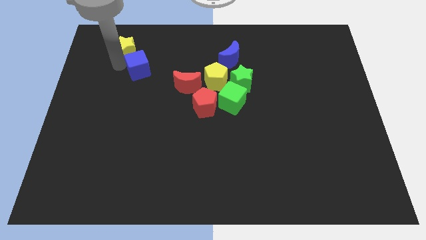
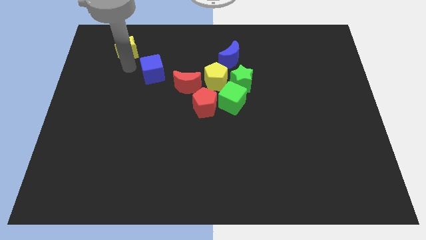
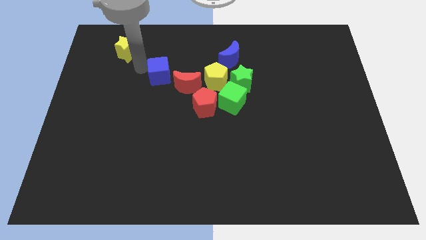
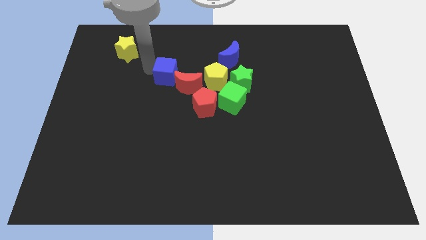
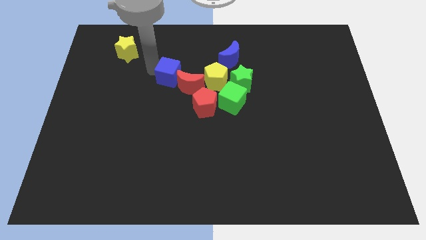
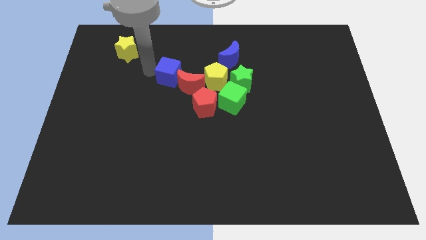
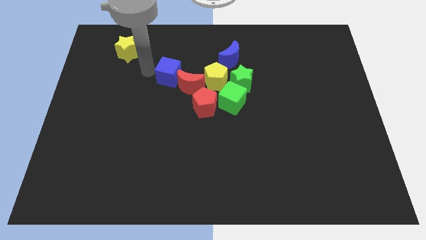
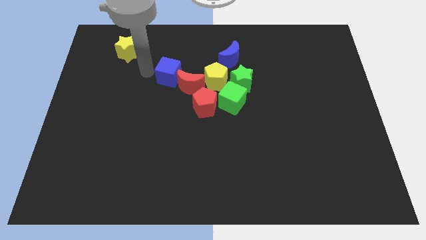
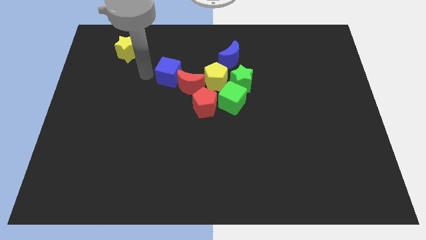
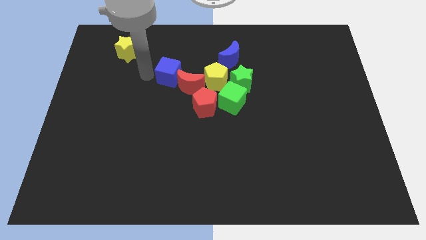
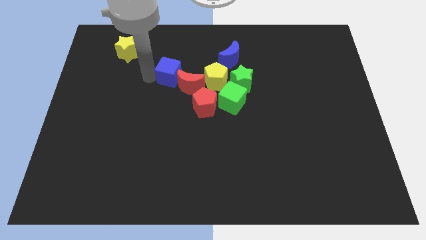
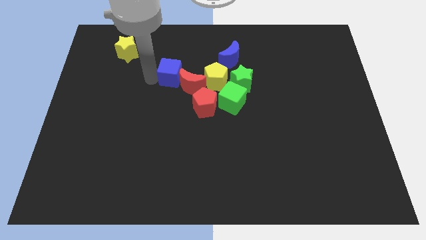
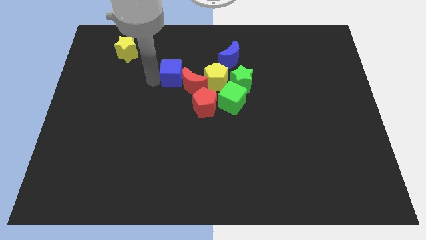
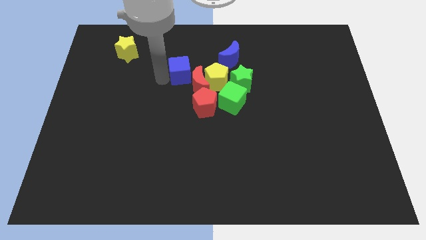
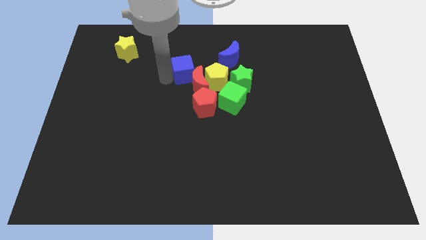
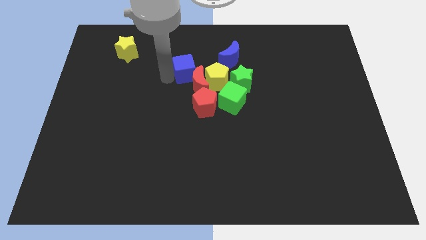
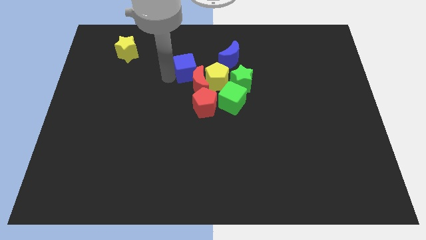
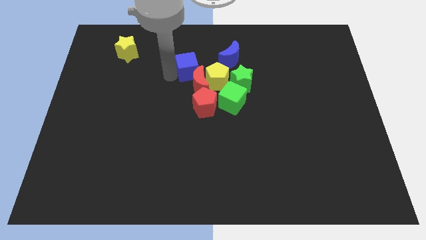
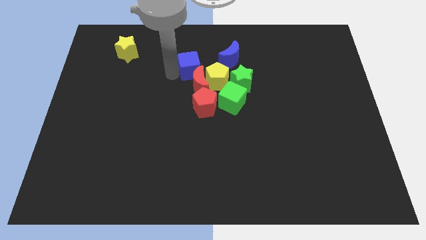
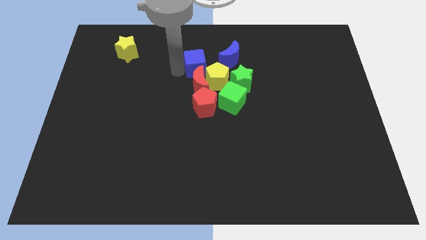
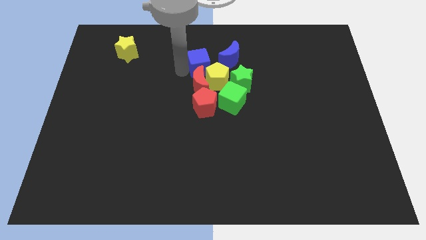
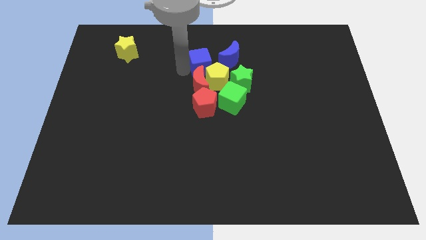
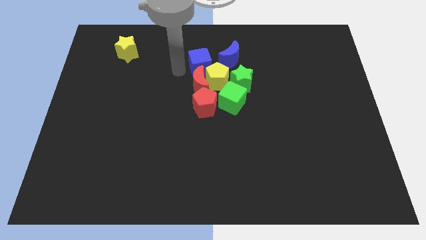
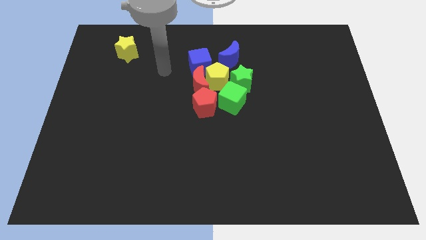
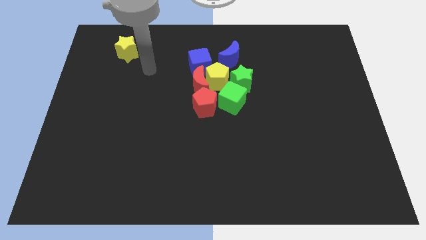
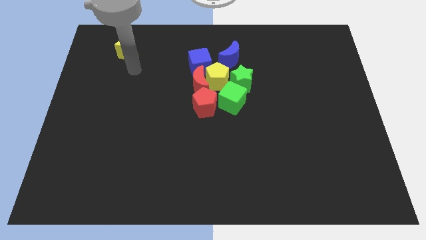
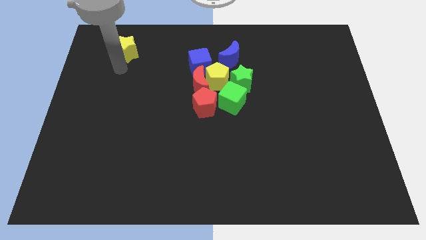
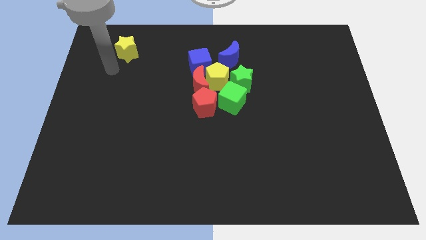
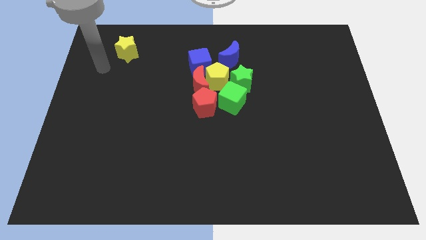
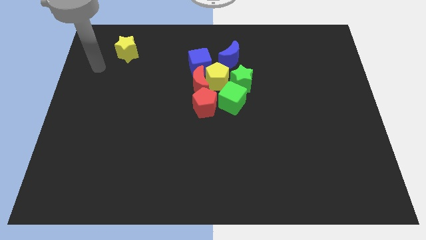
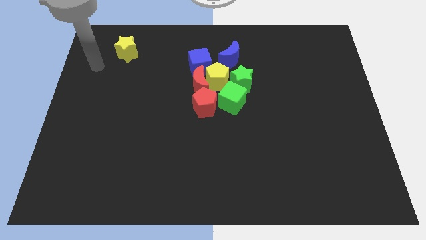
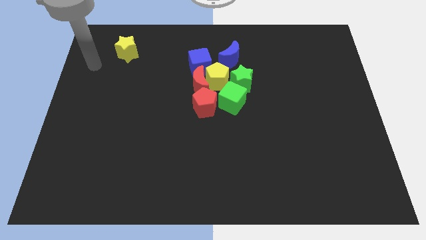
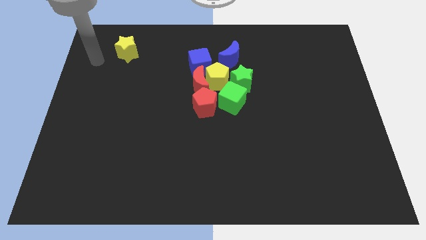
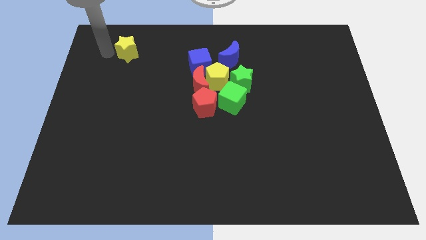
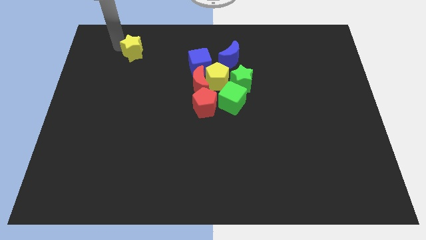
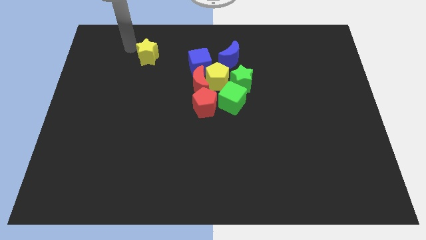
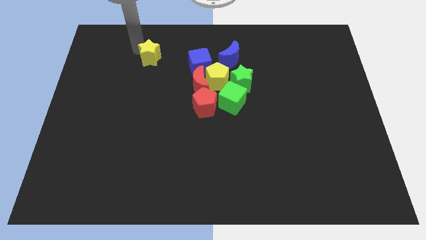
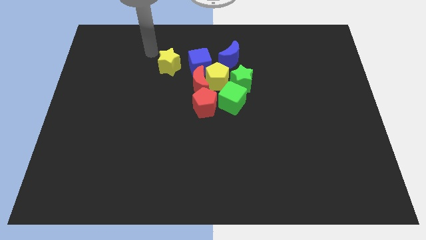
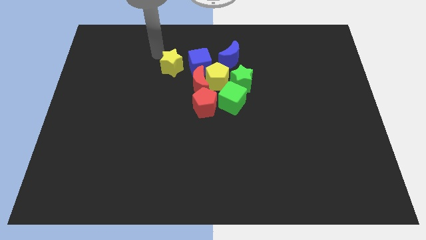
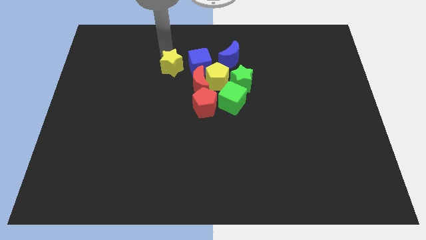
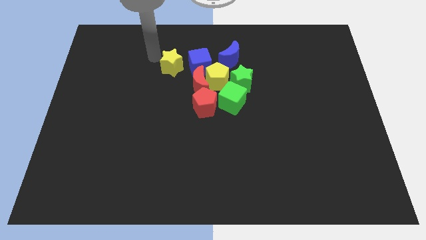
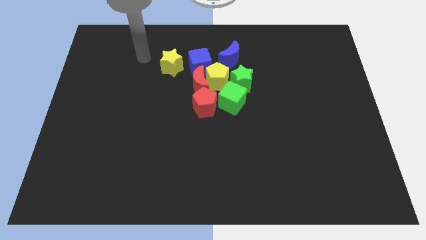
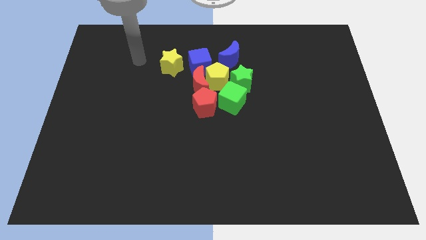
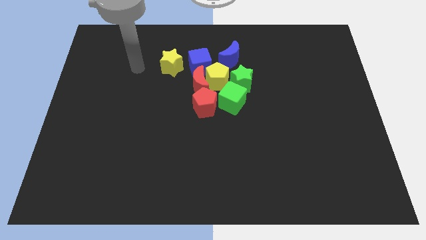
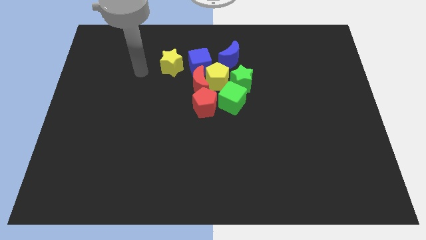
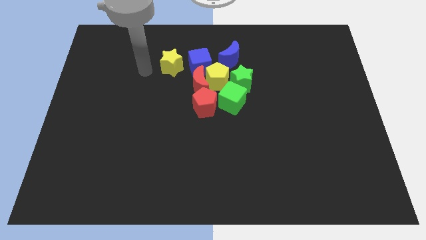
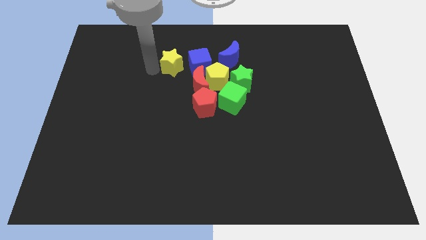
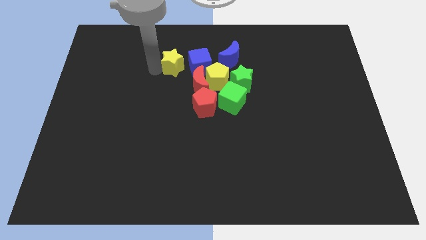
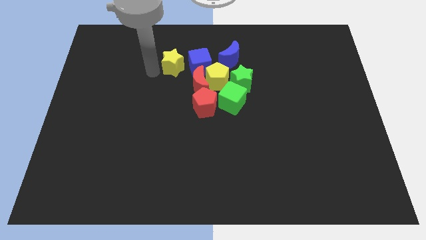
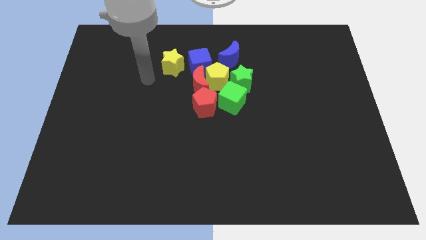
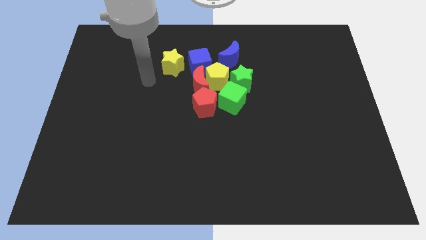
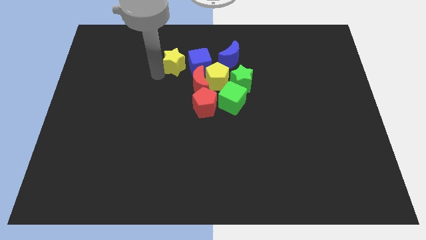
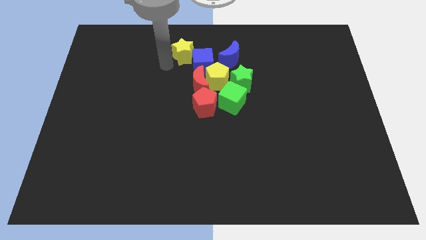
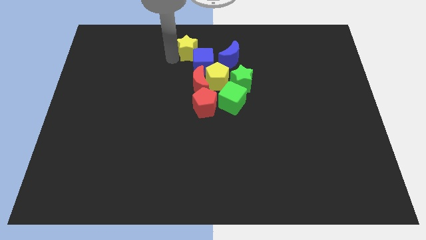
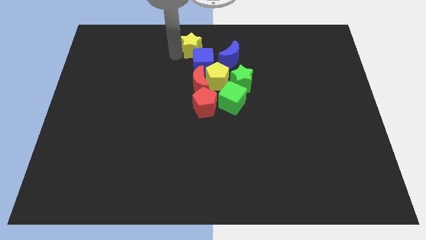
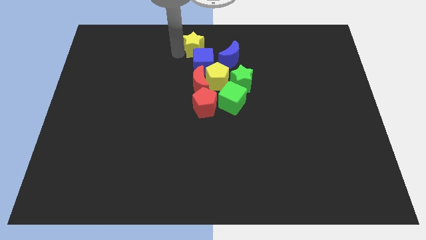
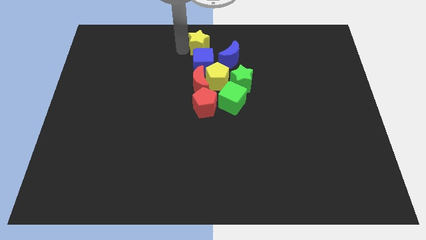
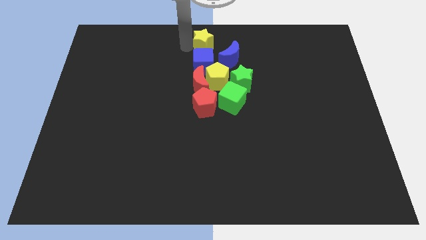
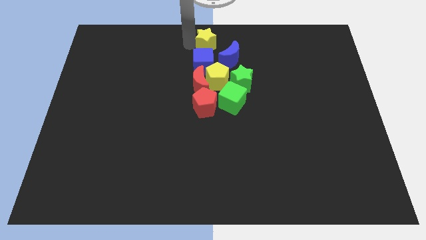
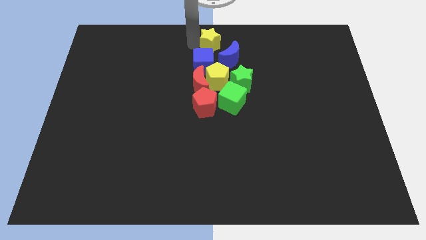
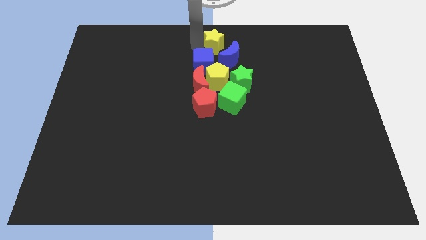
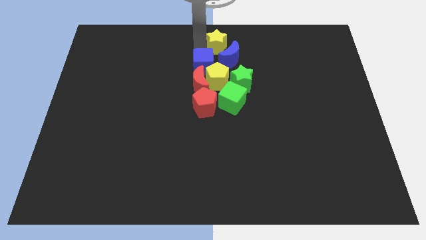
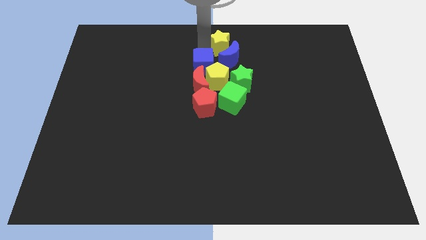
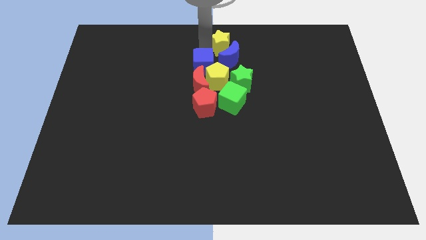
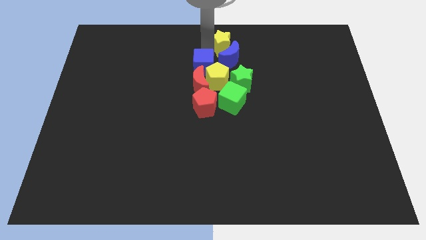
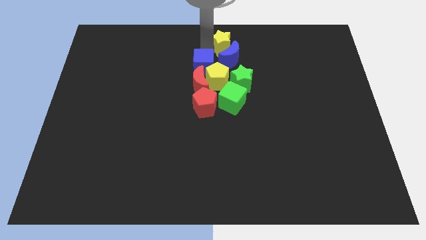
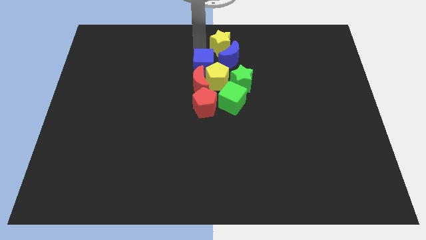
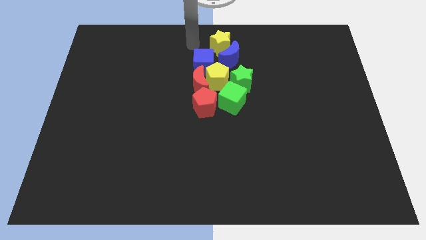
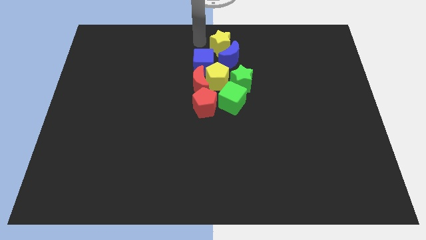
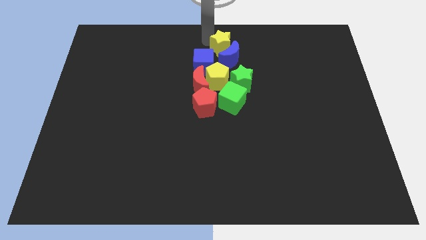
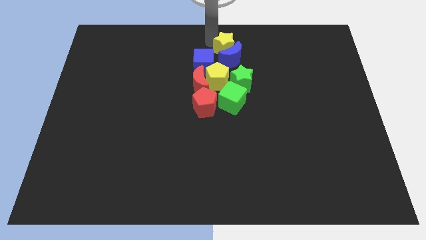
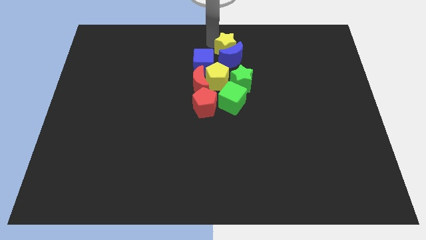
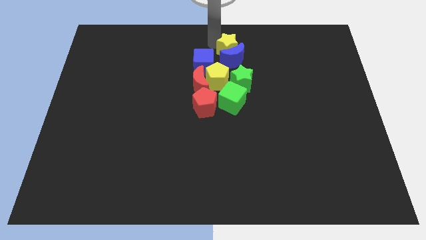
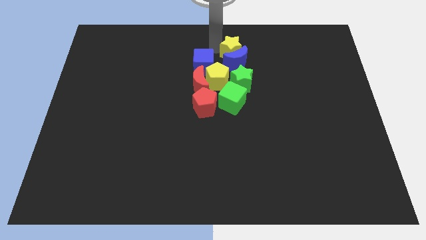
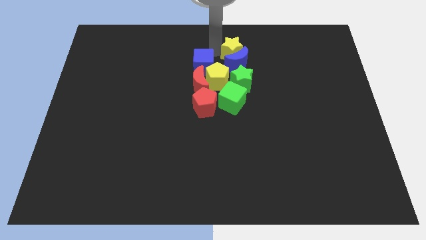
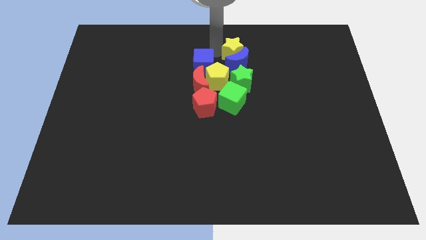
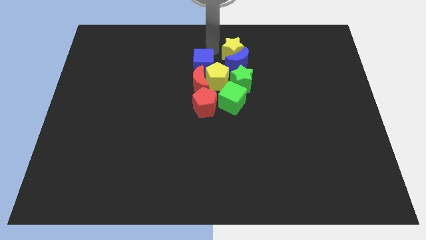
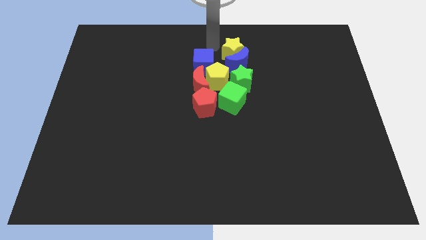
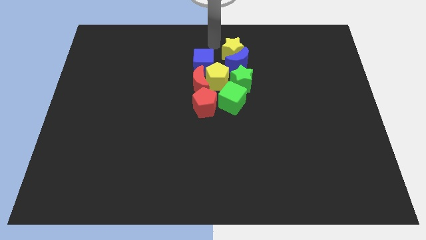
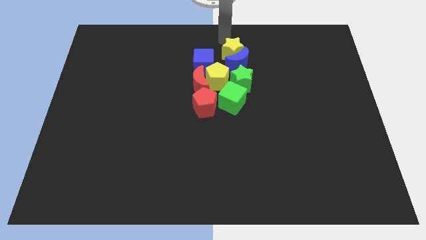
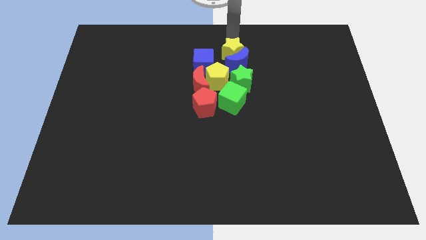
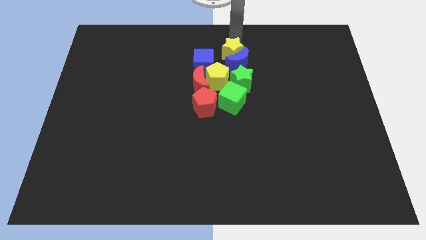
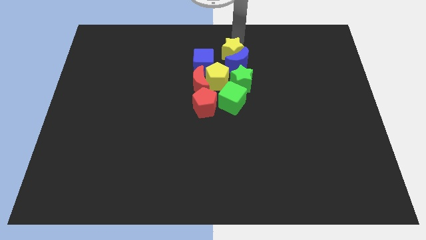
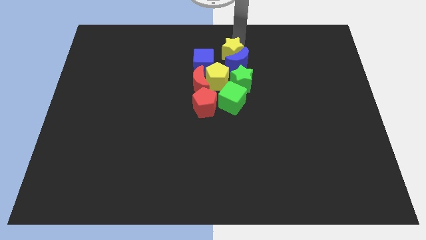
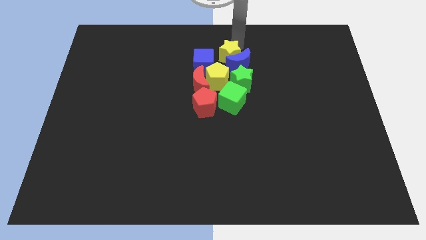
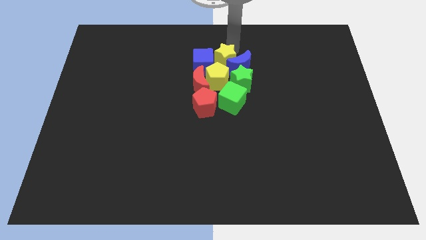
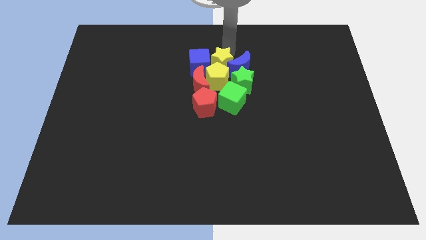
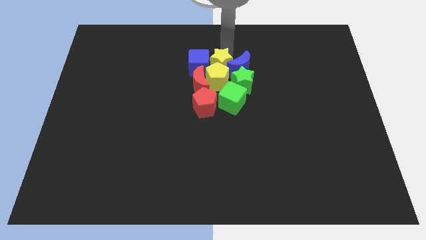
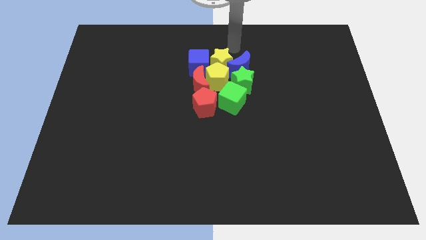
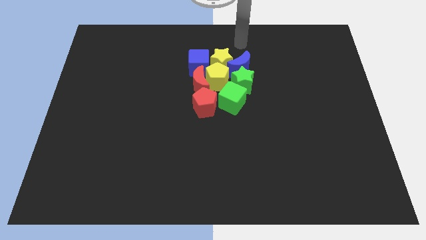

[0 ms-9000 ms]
group up all the blocks at the center of the board

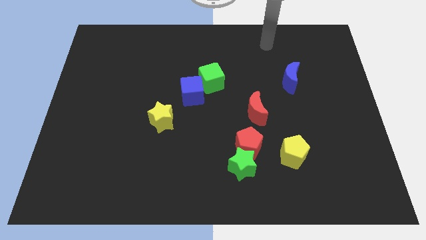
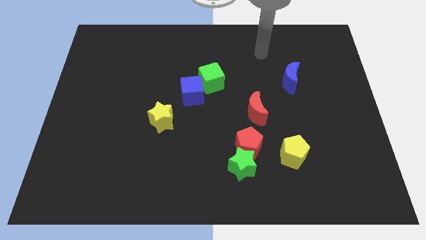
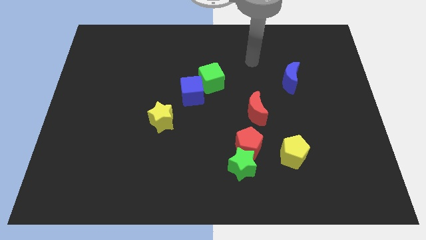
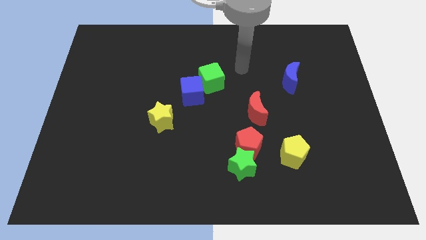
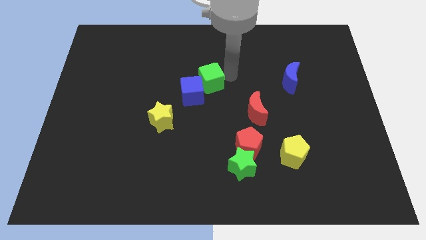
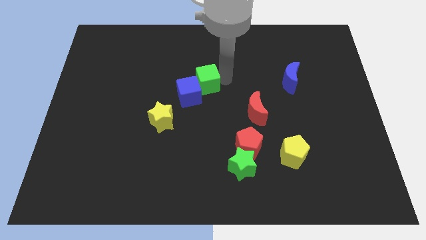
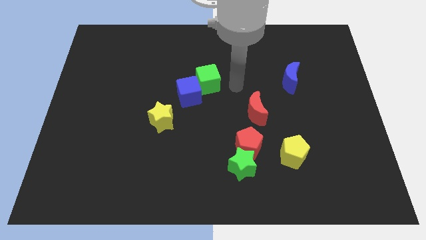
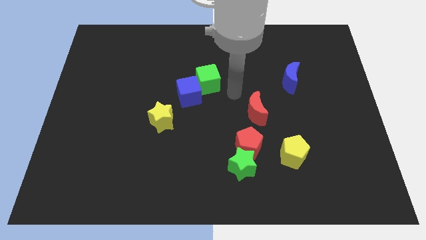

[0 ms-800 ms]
push the green cube into the blue cube
